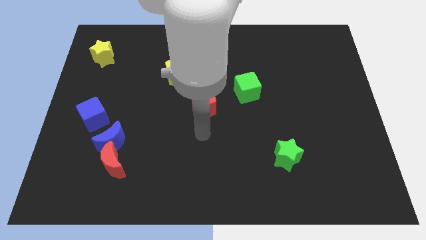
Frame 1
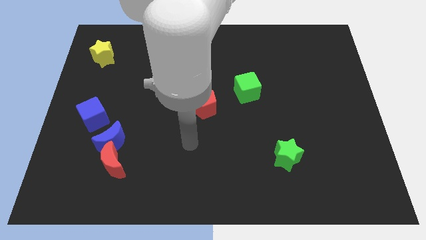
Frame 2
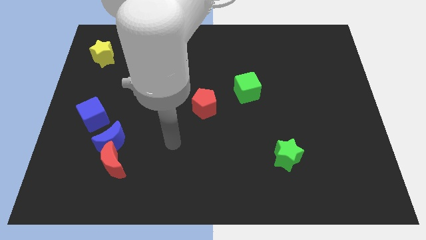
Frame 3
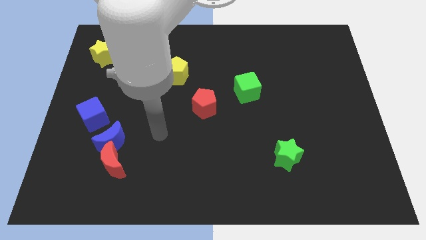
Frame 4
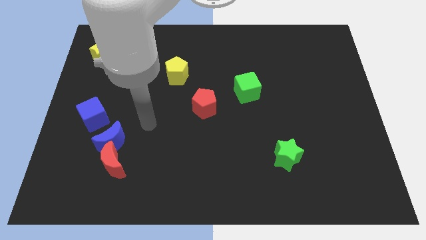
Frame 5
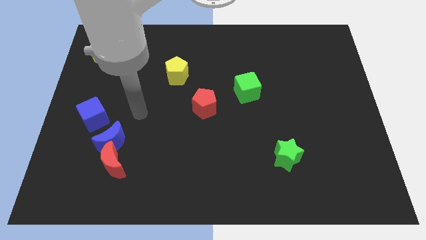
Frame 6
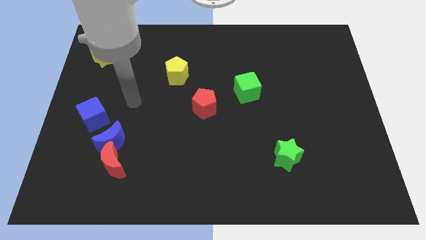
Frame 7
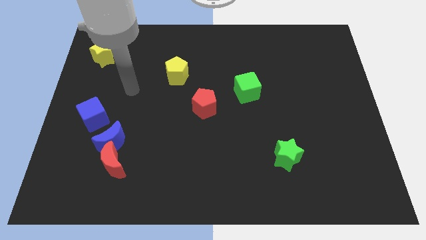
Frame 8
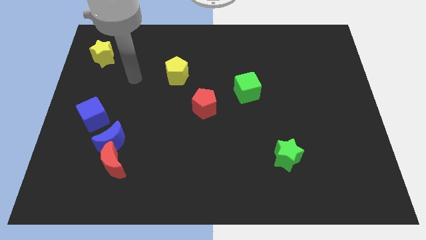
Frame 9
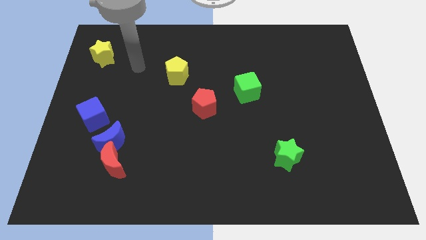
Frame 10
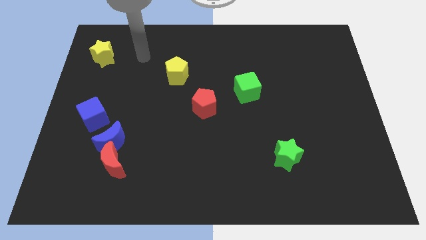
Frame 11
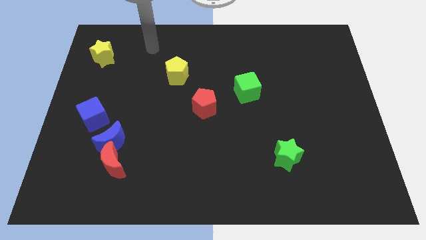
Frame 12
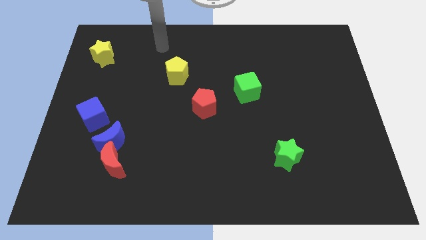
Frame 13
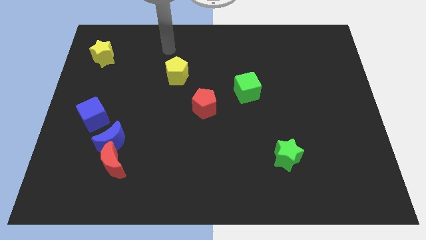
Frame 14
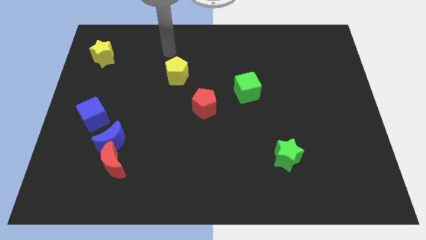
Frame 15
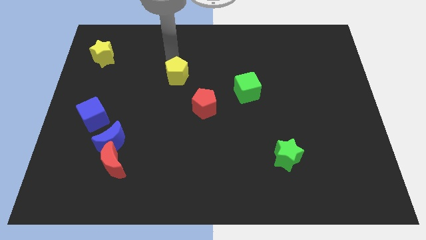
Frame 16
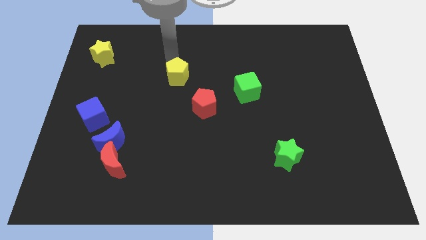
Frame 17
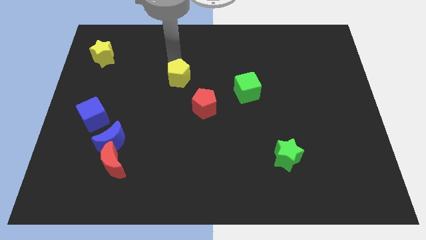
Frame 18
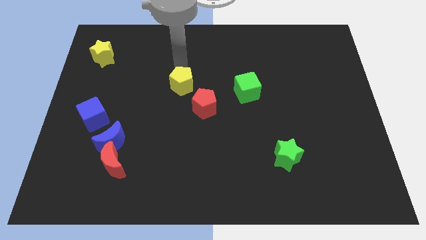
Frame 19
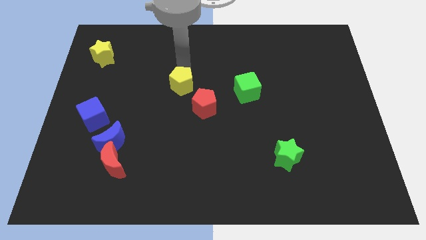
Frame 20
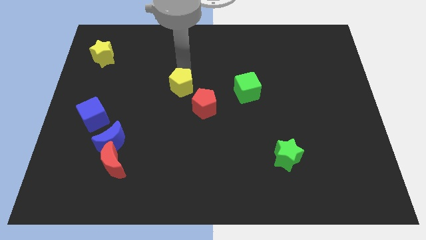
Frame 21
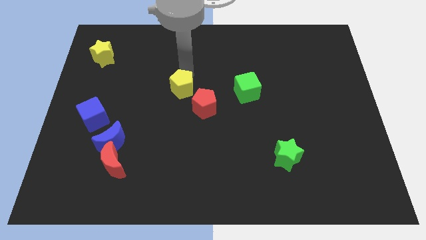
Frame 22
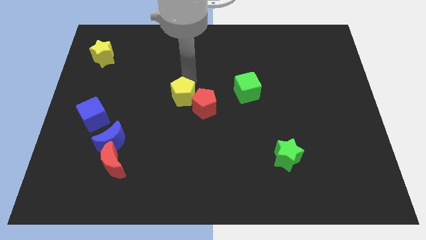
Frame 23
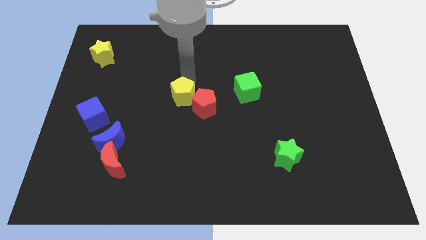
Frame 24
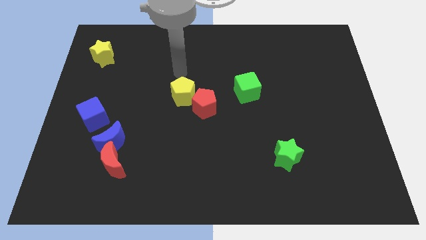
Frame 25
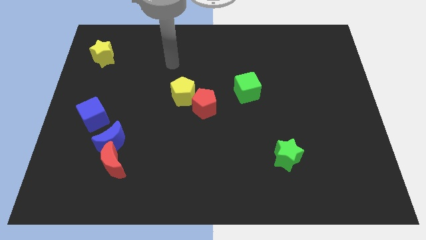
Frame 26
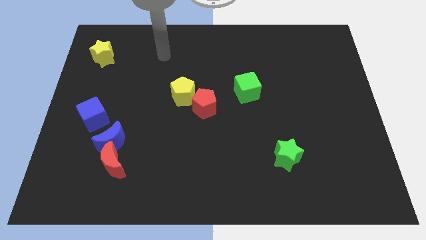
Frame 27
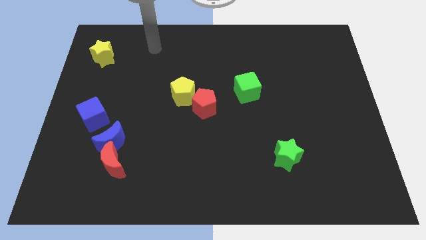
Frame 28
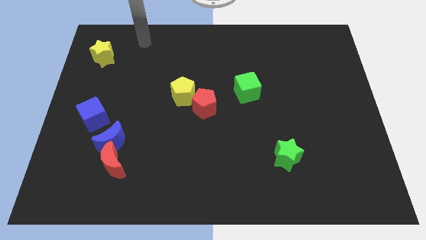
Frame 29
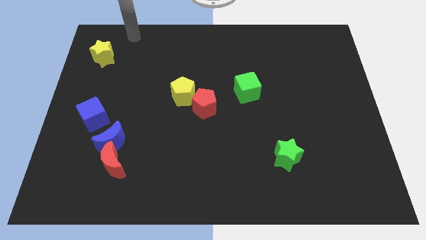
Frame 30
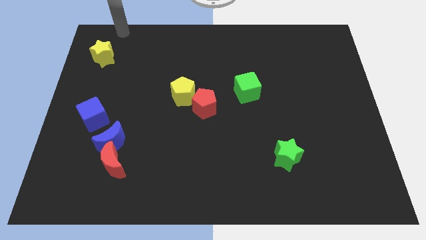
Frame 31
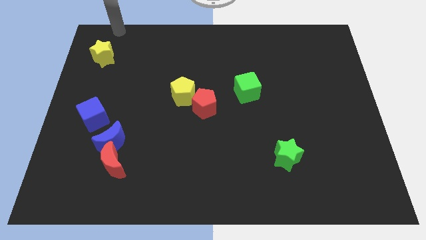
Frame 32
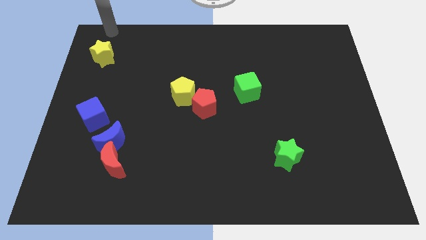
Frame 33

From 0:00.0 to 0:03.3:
push the yellow pentagon to the top left of the red pentagon

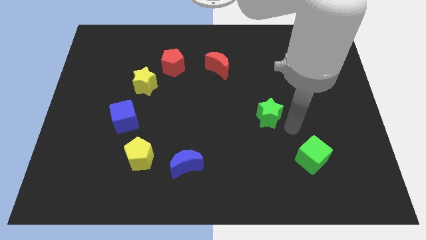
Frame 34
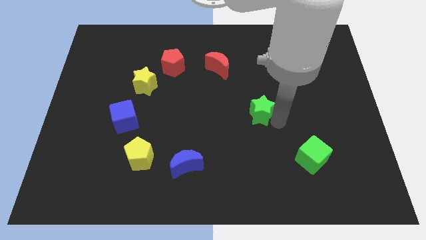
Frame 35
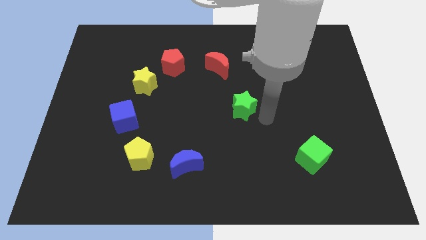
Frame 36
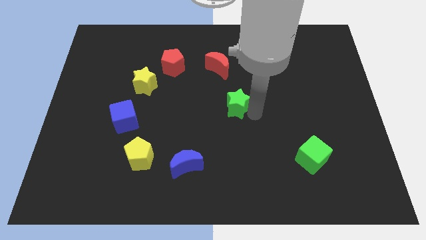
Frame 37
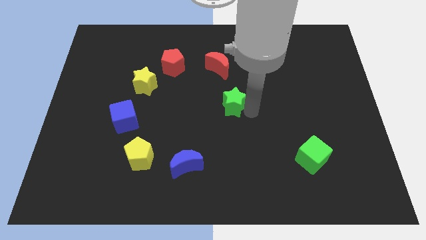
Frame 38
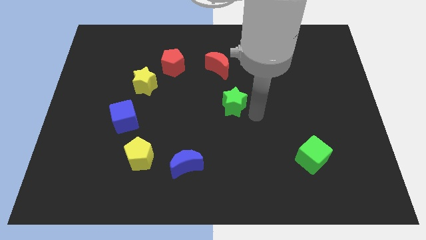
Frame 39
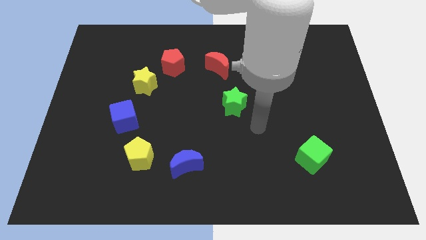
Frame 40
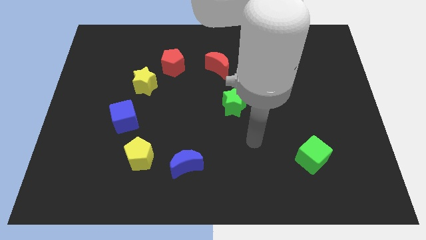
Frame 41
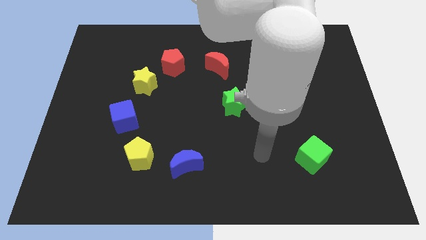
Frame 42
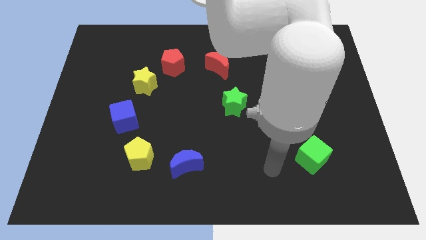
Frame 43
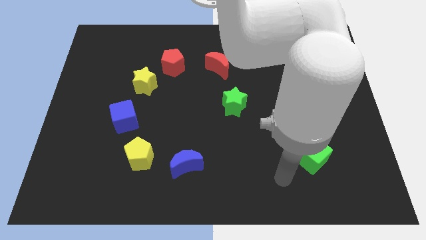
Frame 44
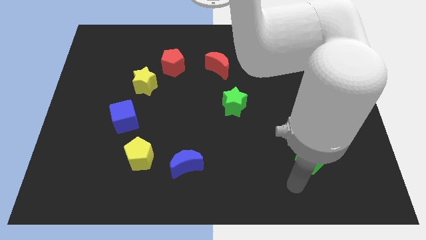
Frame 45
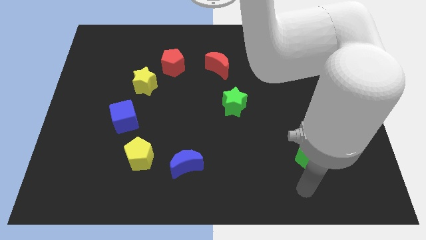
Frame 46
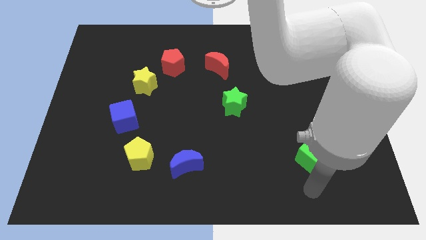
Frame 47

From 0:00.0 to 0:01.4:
push green star towards red crescent

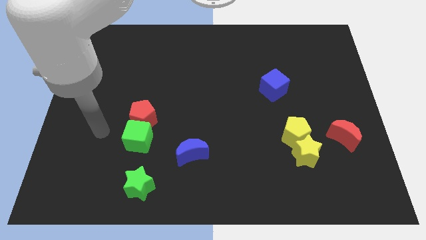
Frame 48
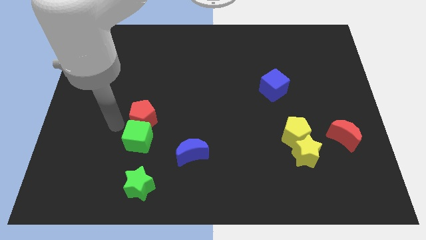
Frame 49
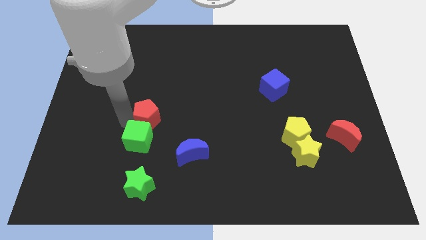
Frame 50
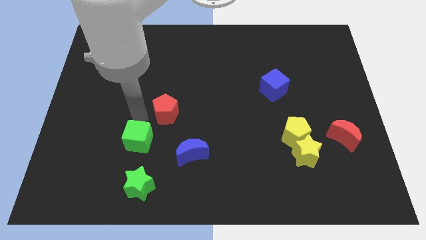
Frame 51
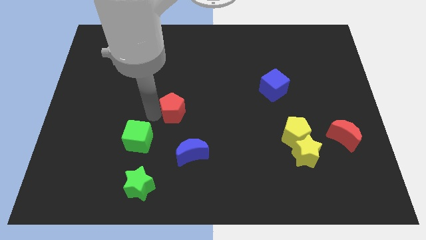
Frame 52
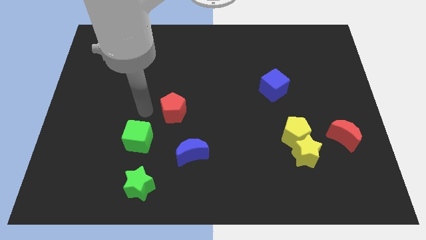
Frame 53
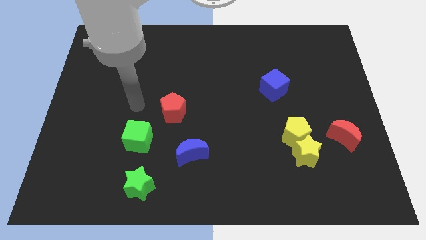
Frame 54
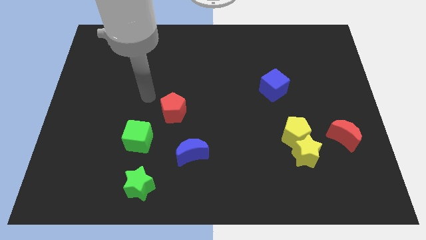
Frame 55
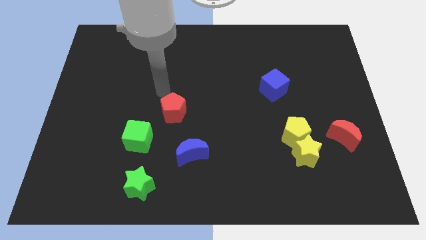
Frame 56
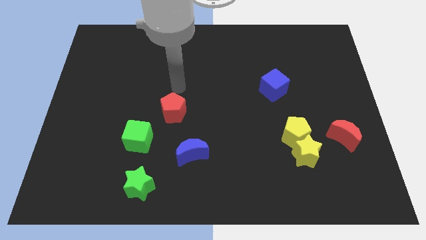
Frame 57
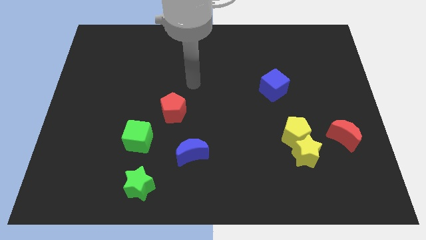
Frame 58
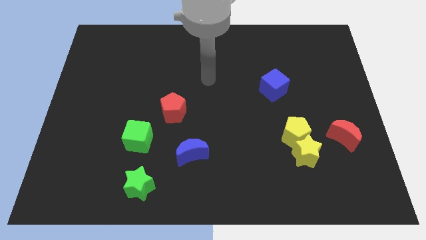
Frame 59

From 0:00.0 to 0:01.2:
separate the red pentagon from the green cube

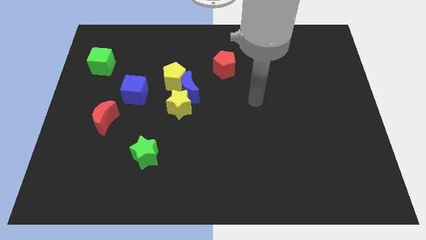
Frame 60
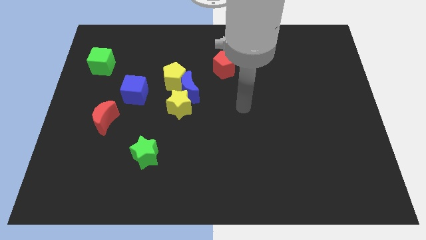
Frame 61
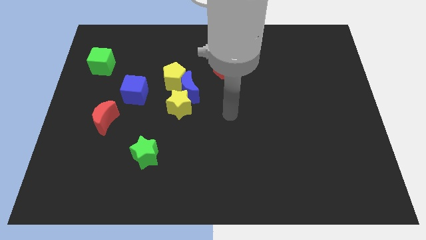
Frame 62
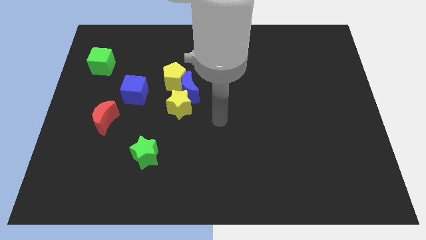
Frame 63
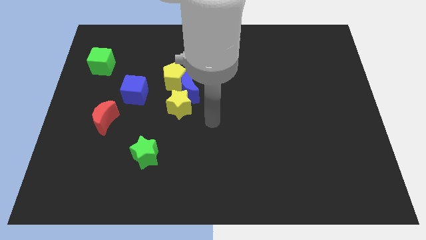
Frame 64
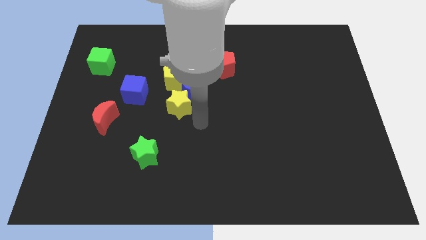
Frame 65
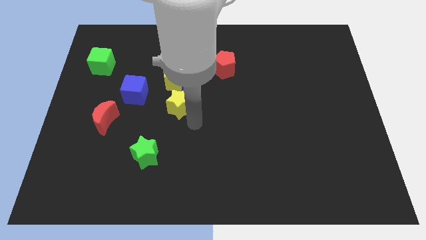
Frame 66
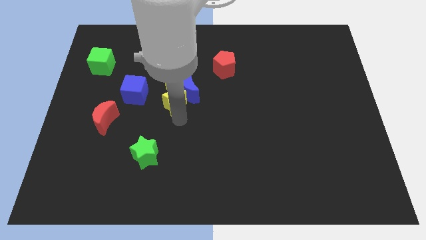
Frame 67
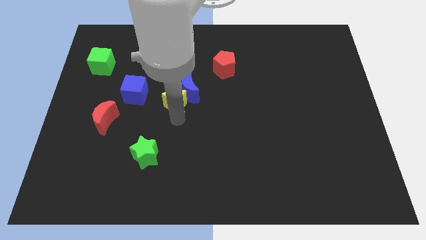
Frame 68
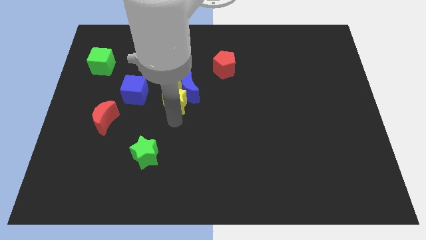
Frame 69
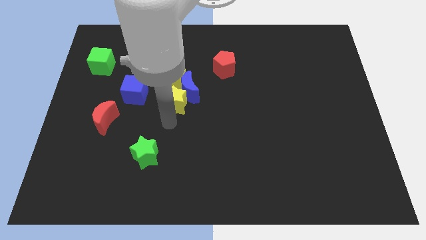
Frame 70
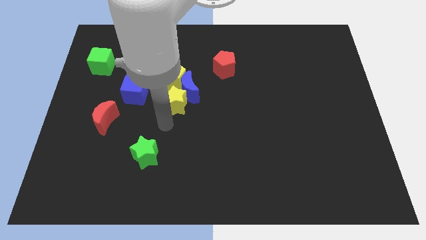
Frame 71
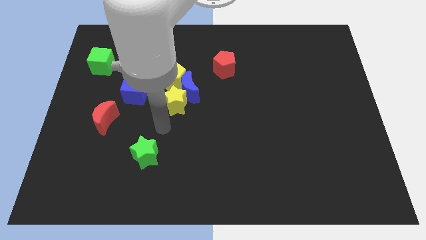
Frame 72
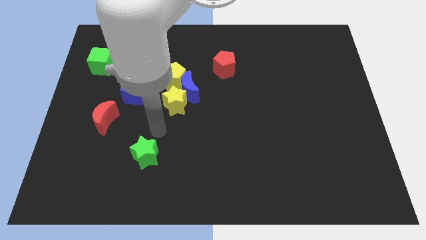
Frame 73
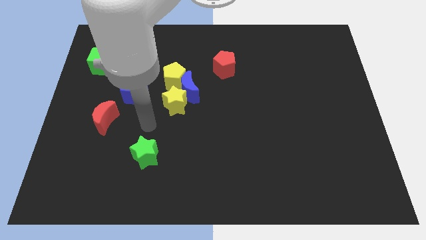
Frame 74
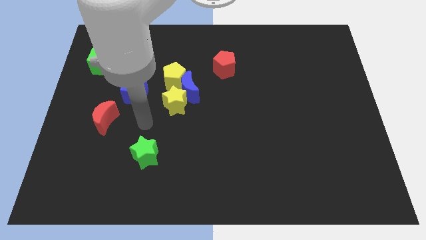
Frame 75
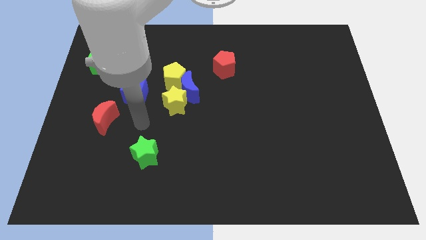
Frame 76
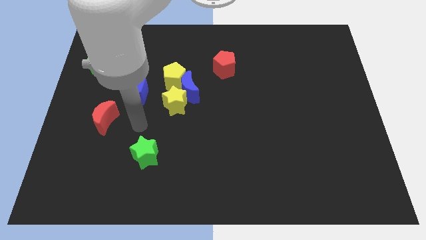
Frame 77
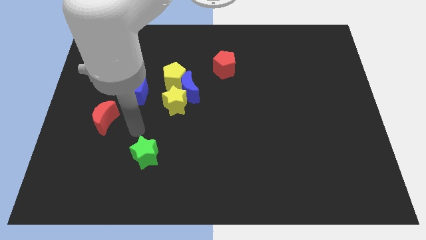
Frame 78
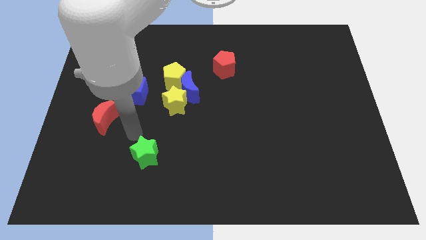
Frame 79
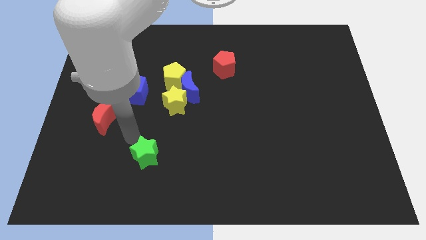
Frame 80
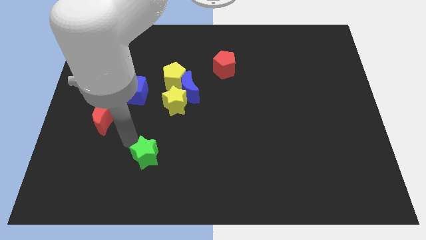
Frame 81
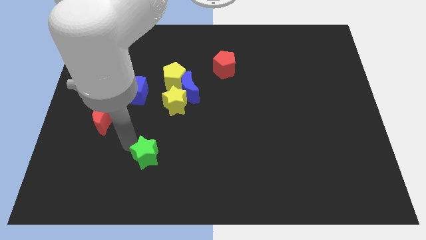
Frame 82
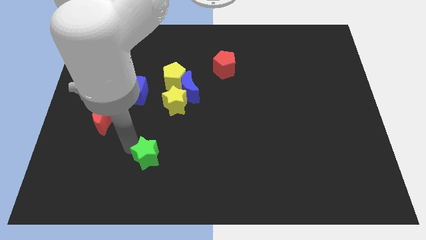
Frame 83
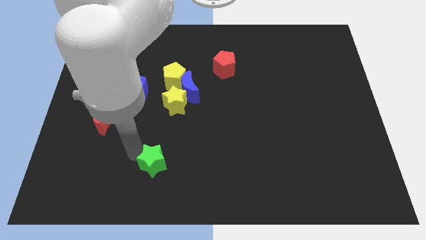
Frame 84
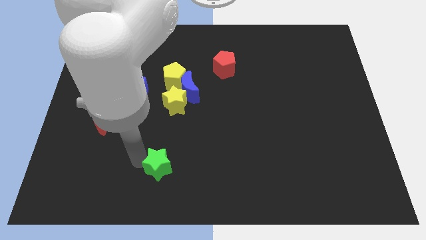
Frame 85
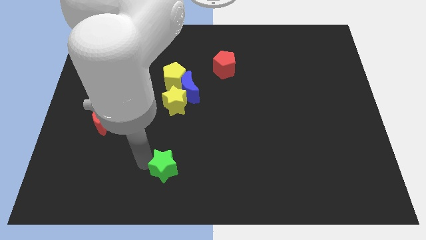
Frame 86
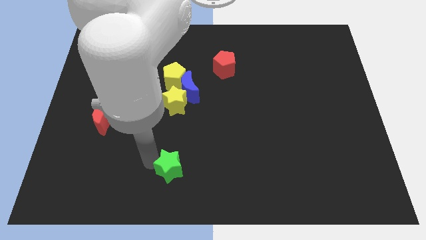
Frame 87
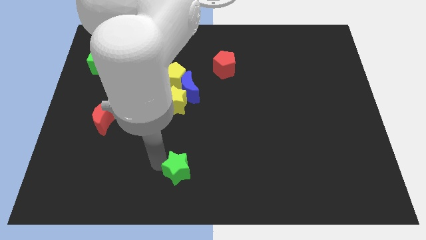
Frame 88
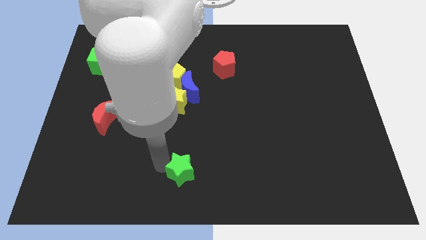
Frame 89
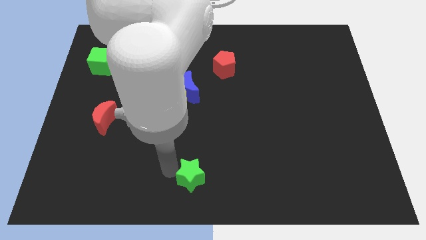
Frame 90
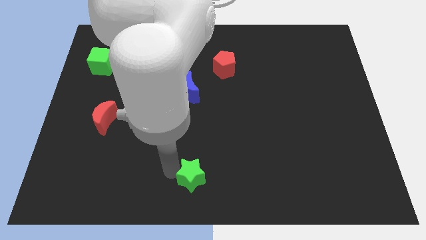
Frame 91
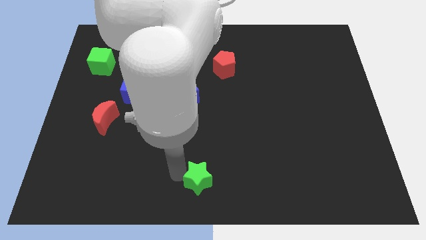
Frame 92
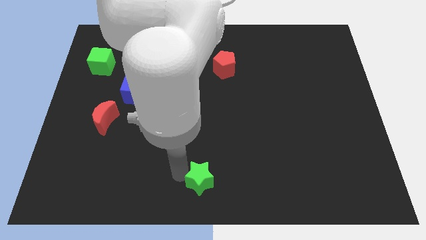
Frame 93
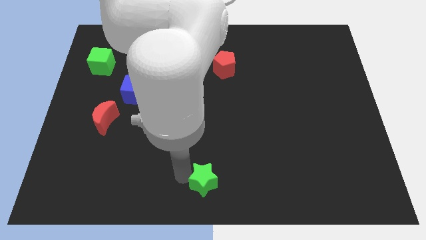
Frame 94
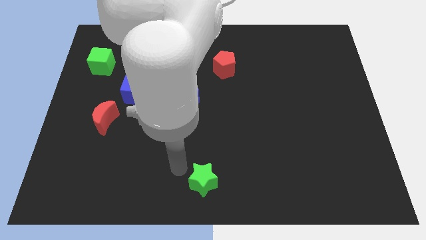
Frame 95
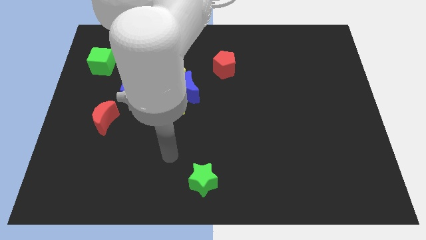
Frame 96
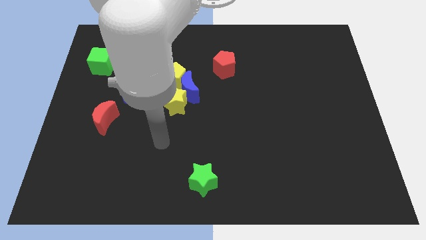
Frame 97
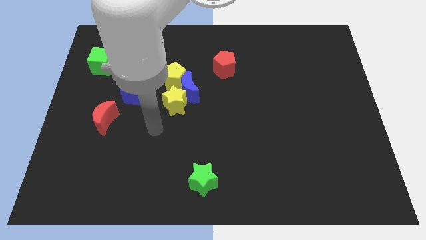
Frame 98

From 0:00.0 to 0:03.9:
move the green star to the bottom center of the board
